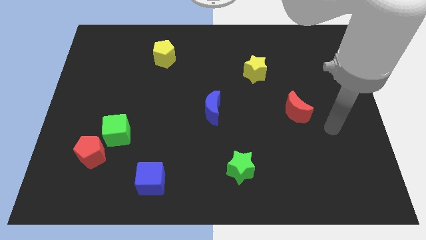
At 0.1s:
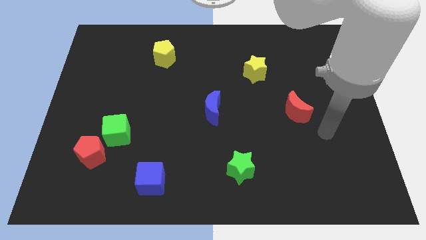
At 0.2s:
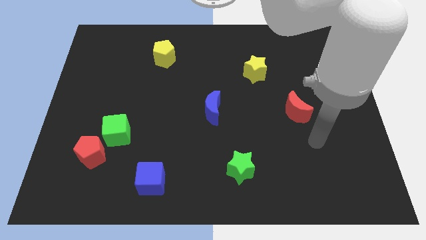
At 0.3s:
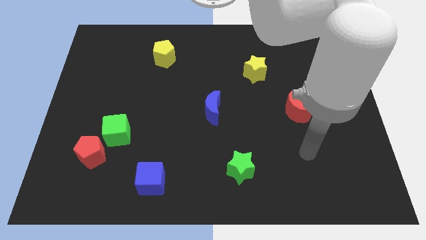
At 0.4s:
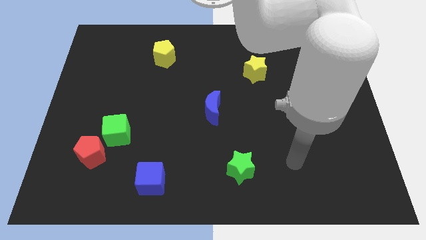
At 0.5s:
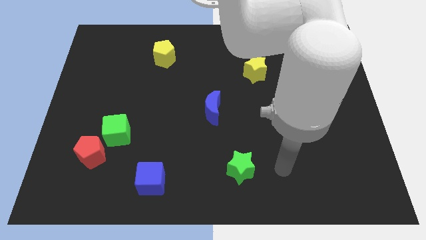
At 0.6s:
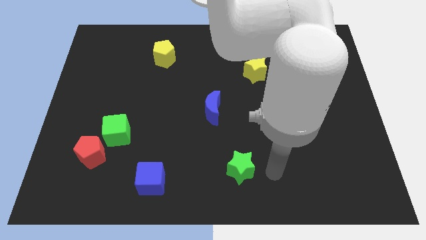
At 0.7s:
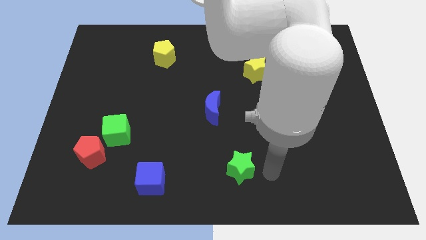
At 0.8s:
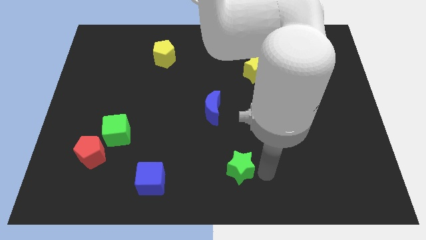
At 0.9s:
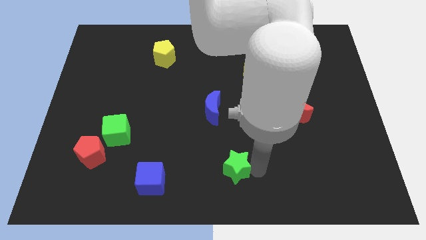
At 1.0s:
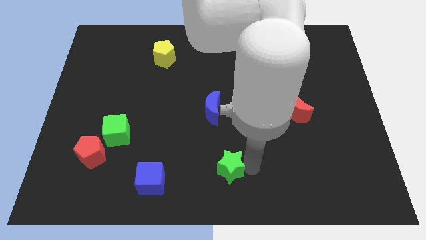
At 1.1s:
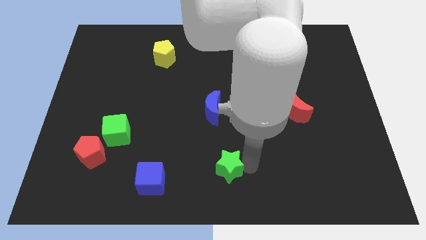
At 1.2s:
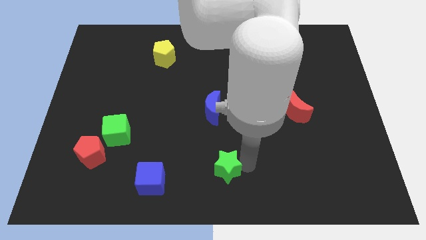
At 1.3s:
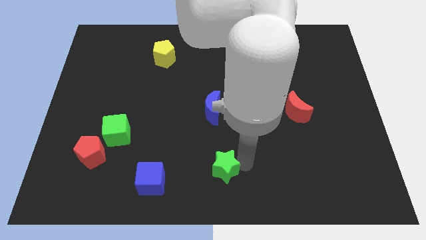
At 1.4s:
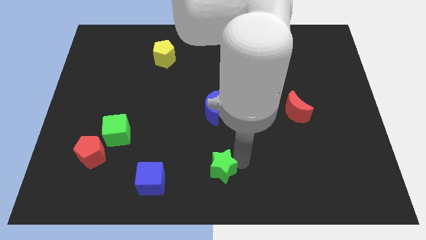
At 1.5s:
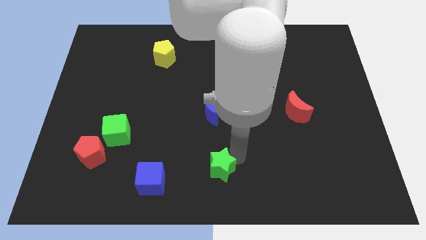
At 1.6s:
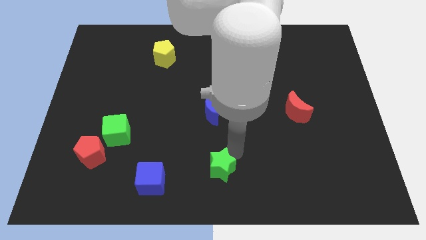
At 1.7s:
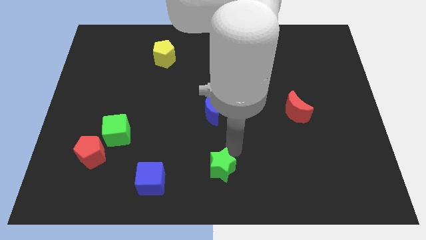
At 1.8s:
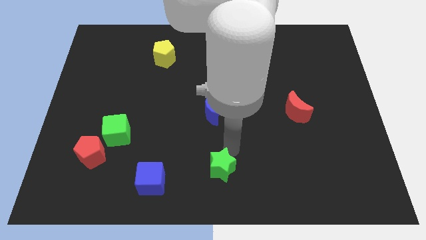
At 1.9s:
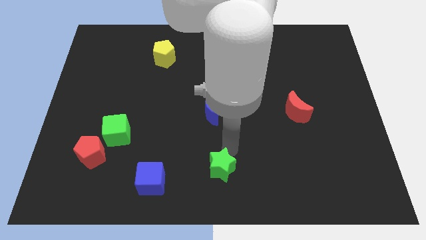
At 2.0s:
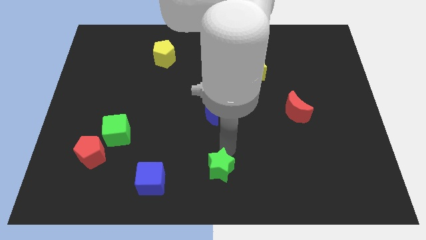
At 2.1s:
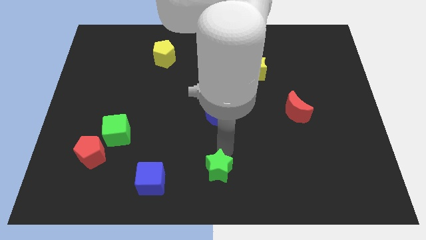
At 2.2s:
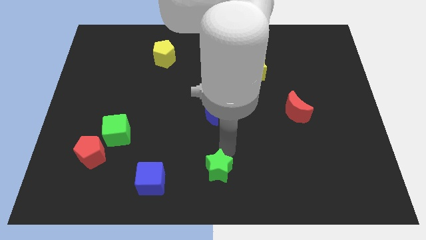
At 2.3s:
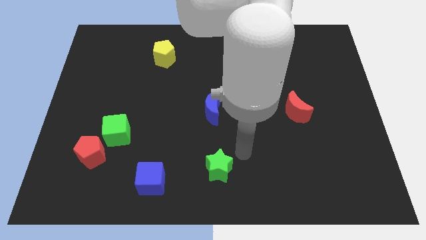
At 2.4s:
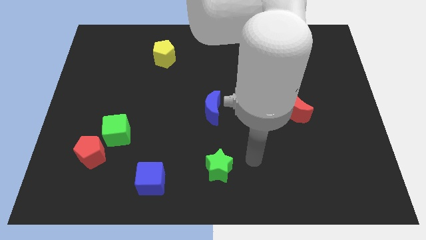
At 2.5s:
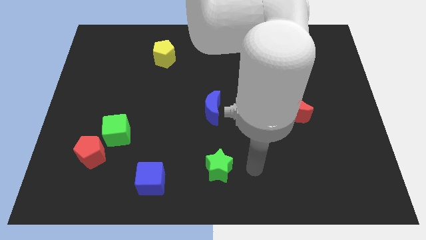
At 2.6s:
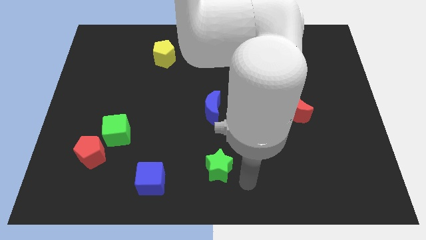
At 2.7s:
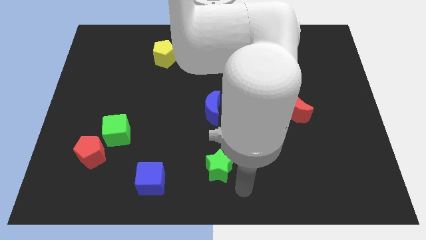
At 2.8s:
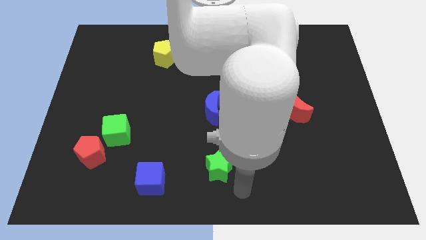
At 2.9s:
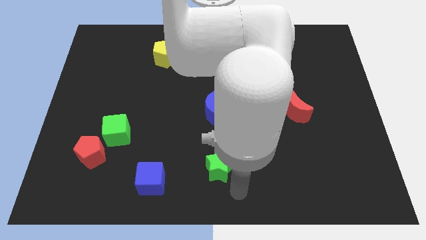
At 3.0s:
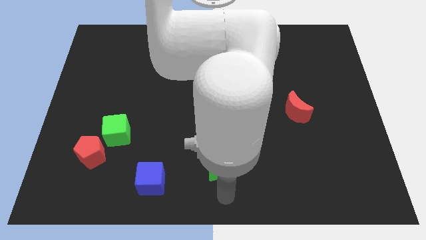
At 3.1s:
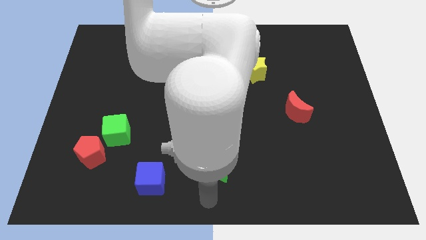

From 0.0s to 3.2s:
move the green star slightly to the left

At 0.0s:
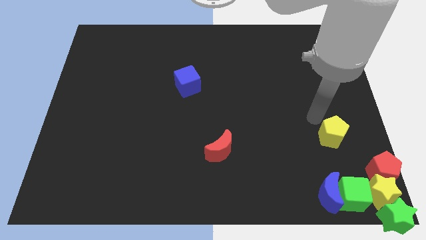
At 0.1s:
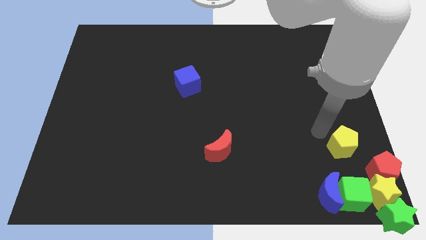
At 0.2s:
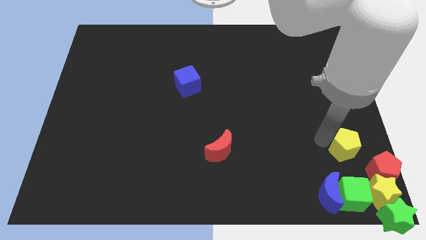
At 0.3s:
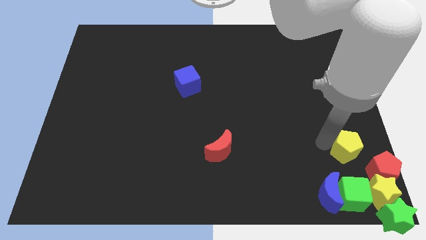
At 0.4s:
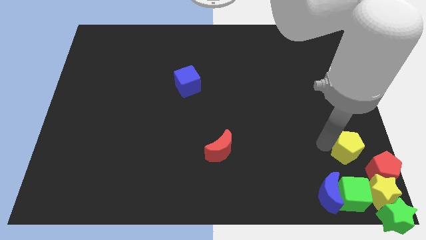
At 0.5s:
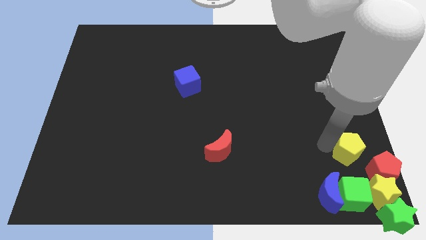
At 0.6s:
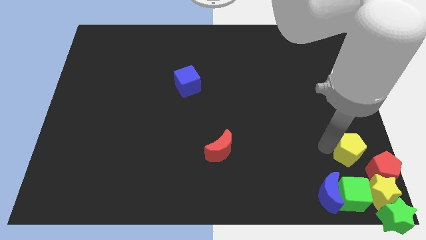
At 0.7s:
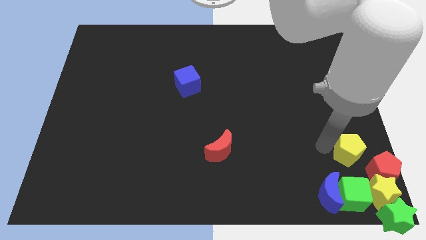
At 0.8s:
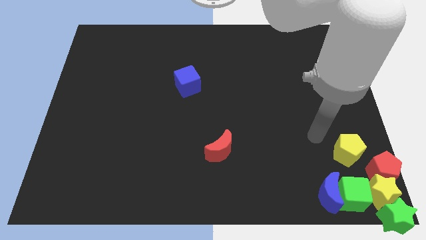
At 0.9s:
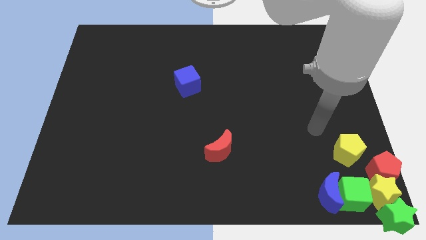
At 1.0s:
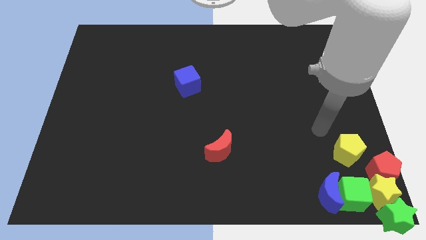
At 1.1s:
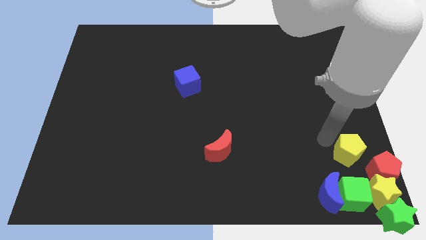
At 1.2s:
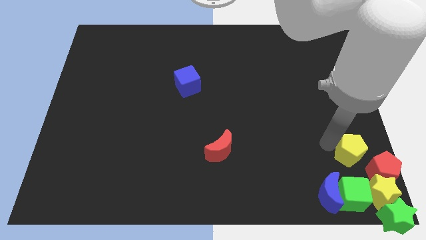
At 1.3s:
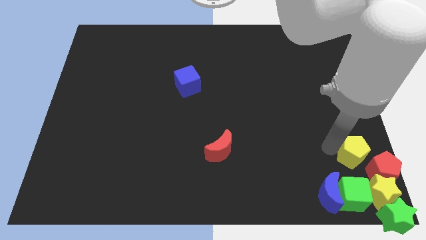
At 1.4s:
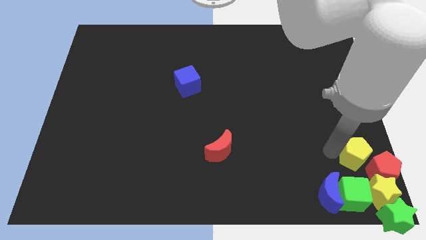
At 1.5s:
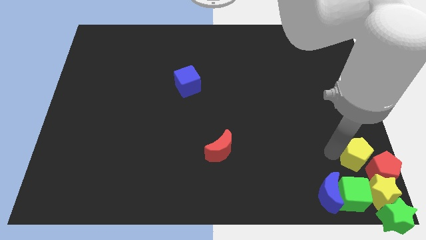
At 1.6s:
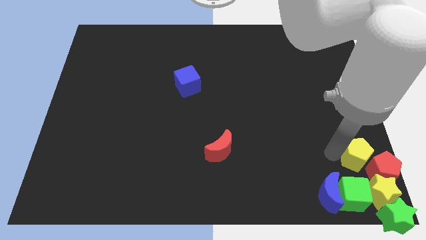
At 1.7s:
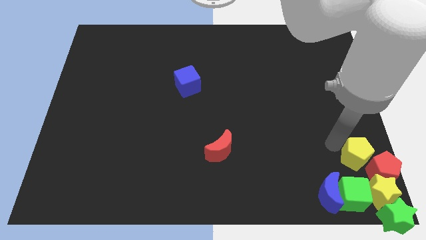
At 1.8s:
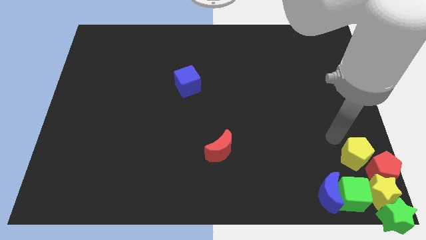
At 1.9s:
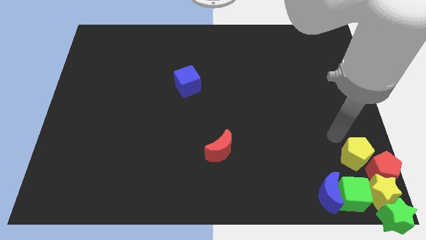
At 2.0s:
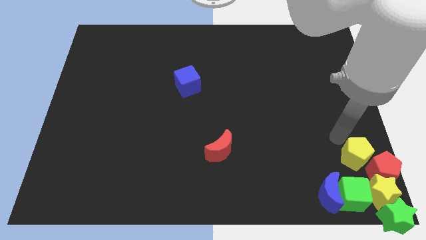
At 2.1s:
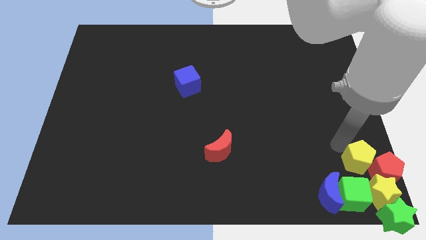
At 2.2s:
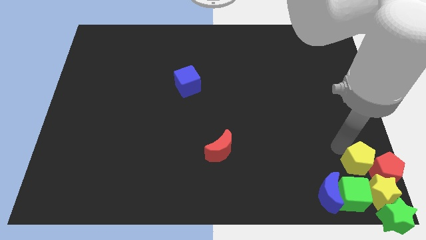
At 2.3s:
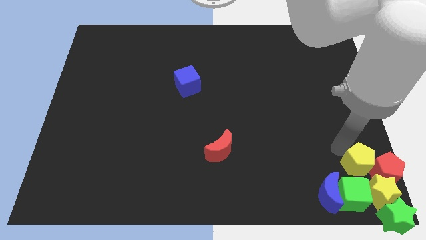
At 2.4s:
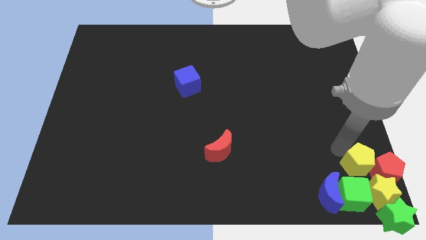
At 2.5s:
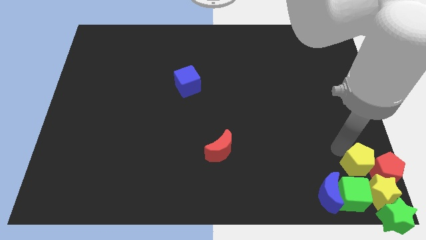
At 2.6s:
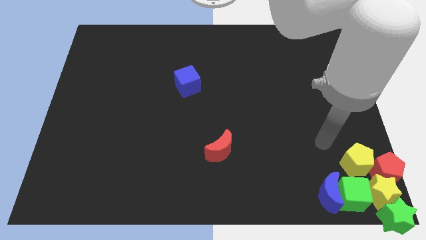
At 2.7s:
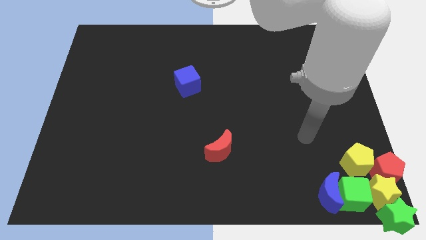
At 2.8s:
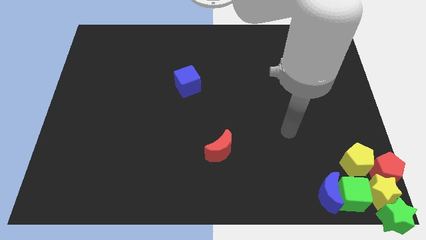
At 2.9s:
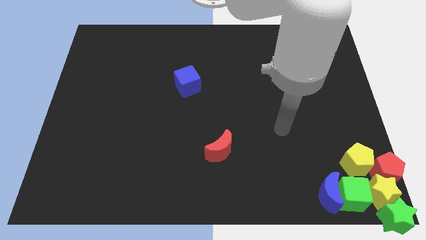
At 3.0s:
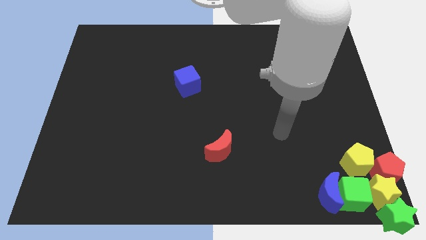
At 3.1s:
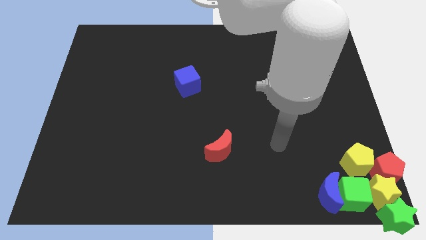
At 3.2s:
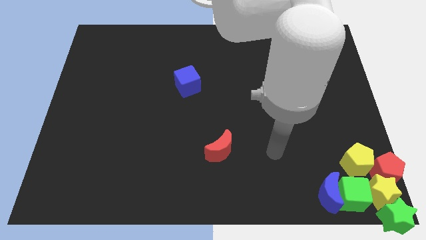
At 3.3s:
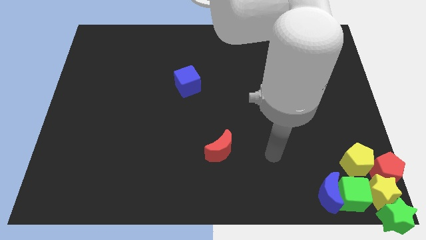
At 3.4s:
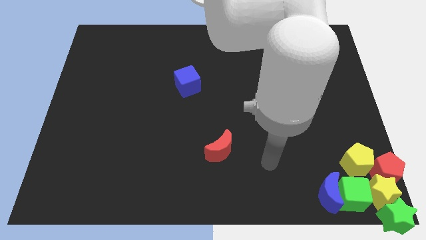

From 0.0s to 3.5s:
push the yellow pentagon to the left of the red pentagon

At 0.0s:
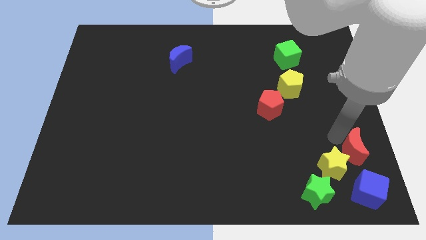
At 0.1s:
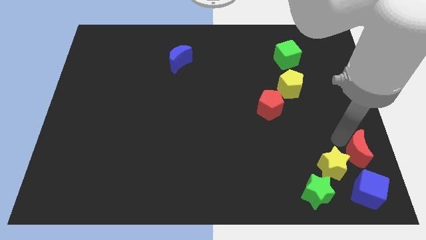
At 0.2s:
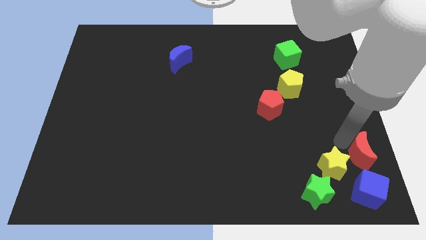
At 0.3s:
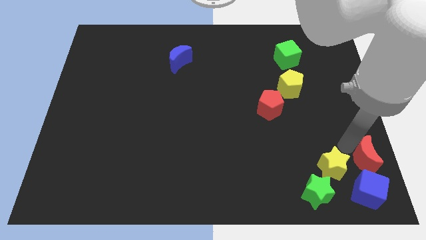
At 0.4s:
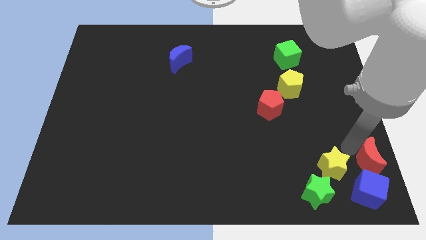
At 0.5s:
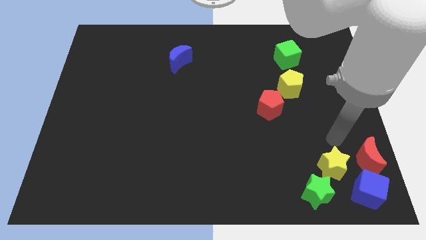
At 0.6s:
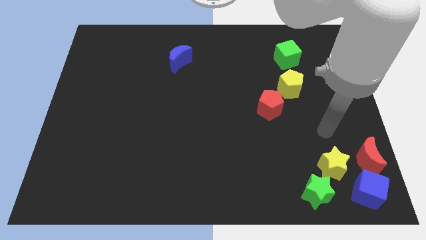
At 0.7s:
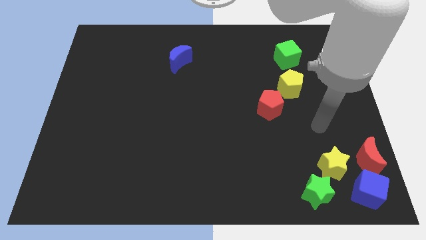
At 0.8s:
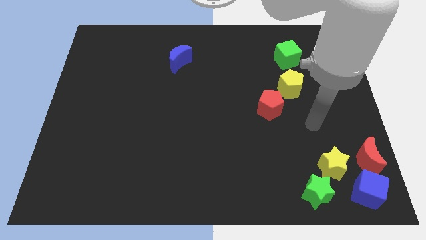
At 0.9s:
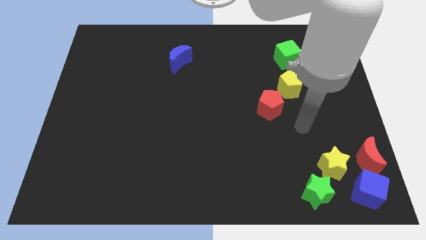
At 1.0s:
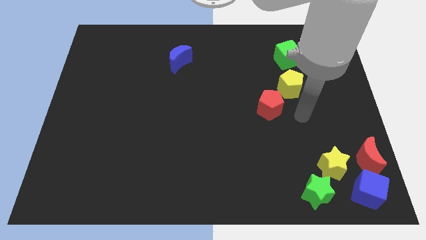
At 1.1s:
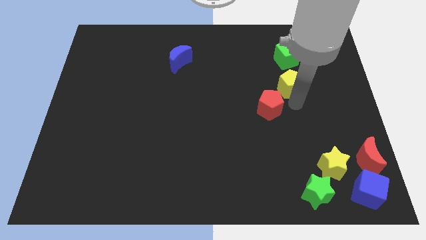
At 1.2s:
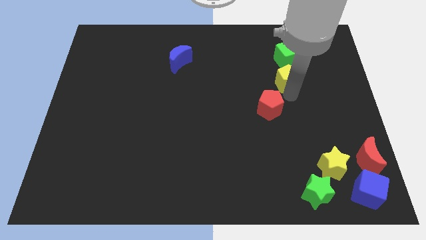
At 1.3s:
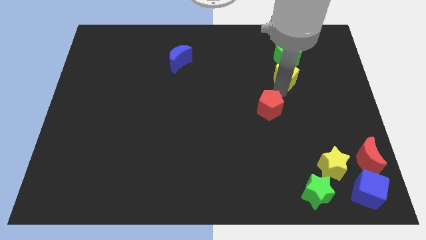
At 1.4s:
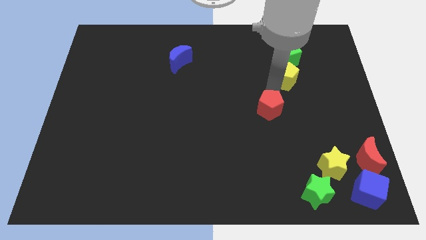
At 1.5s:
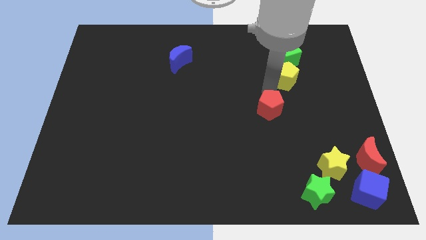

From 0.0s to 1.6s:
touch the red pentagon with your arm

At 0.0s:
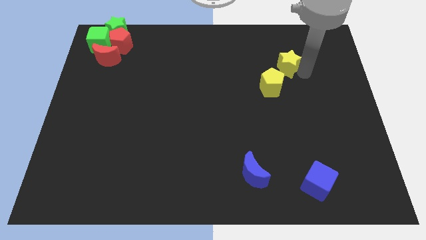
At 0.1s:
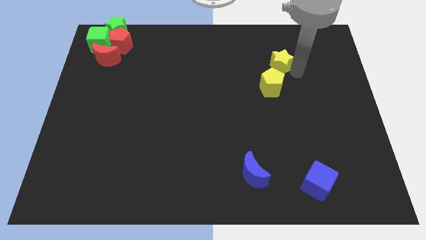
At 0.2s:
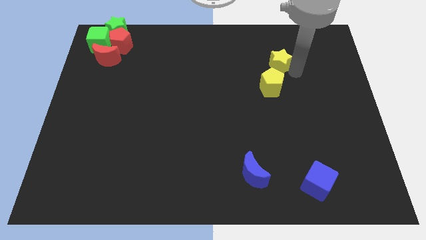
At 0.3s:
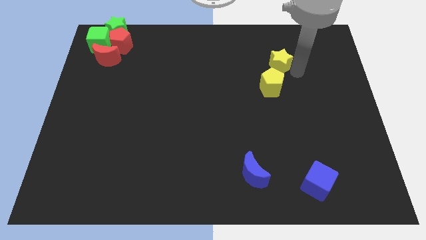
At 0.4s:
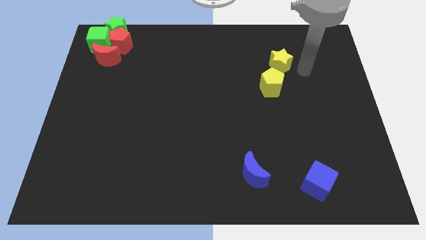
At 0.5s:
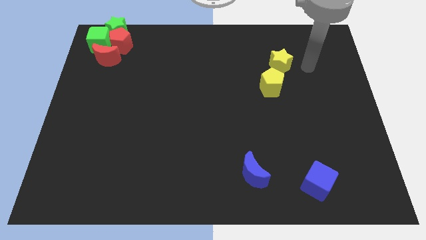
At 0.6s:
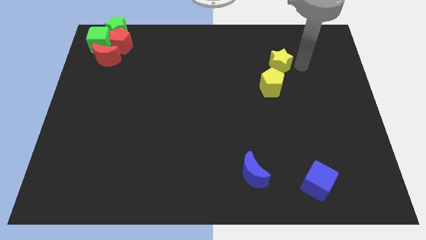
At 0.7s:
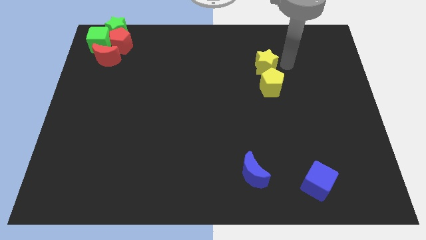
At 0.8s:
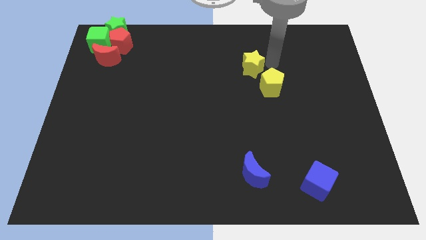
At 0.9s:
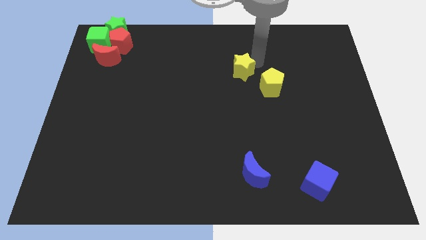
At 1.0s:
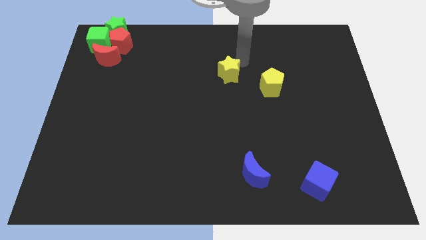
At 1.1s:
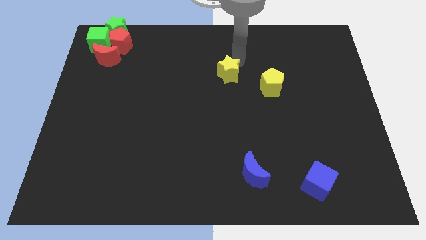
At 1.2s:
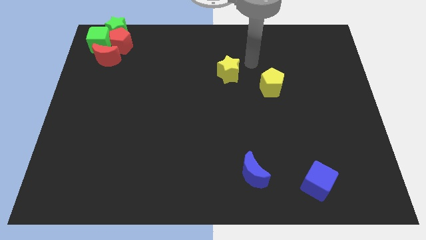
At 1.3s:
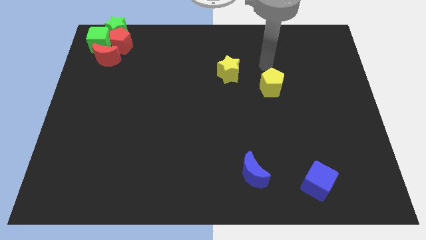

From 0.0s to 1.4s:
push the yellow star slightly on the left side of the board
